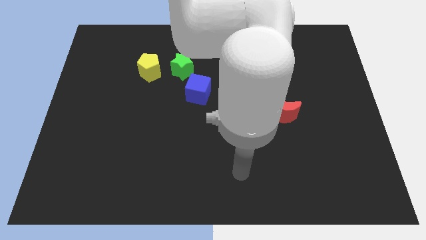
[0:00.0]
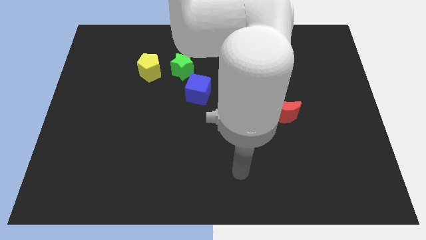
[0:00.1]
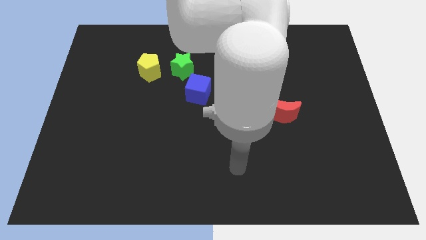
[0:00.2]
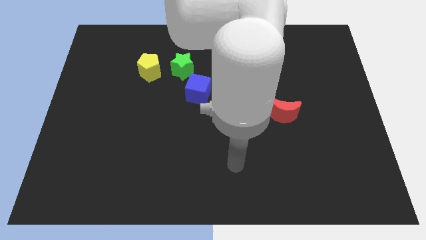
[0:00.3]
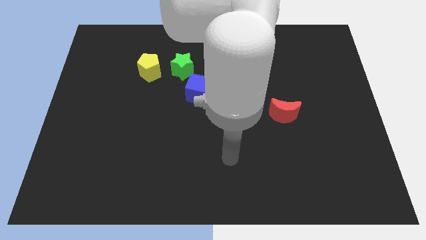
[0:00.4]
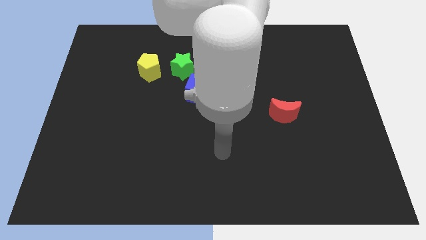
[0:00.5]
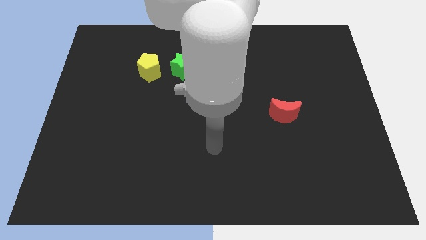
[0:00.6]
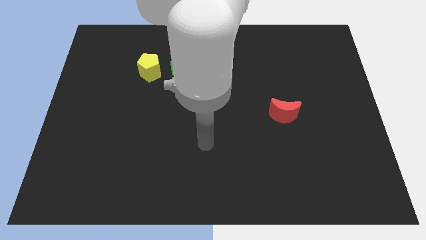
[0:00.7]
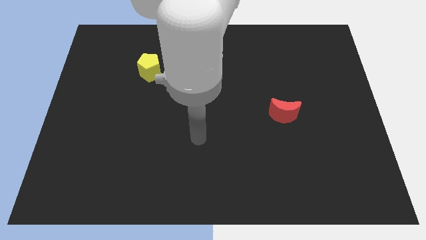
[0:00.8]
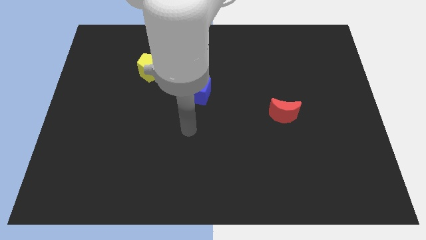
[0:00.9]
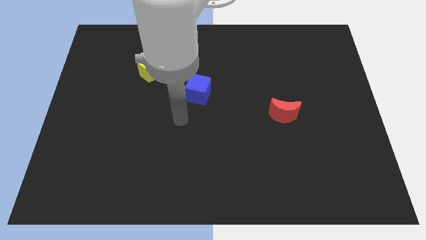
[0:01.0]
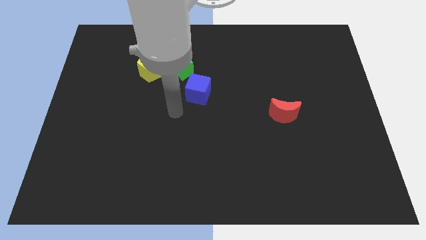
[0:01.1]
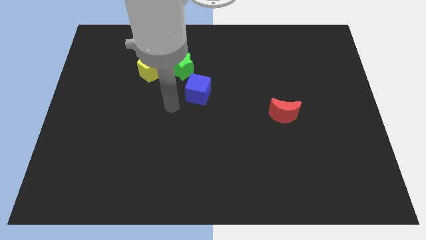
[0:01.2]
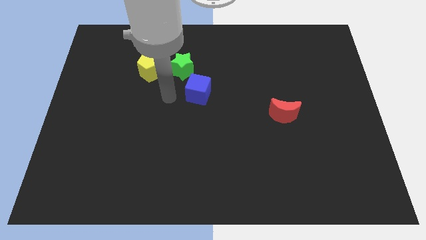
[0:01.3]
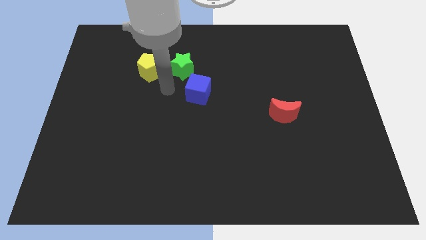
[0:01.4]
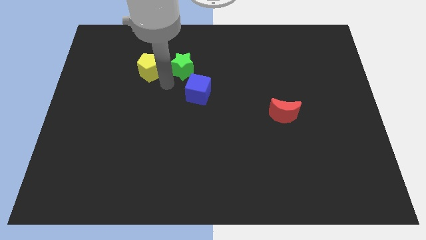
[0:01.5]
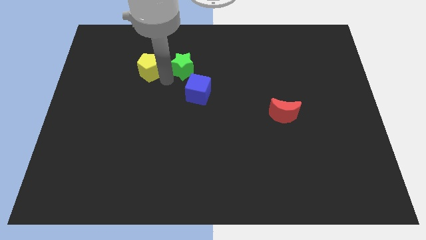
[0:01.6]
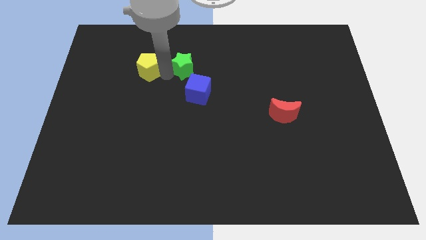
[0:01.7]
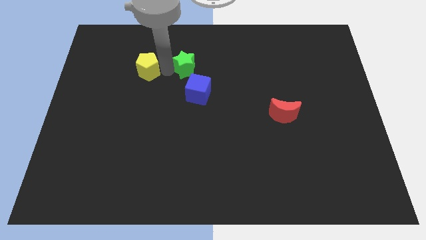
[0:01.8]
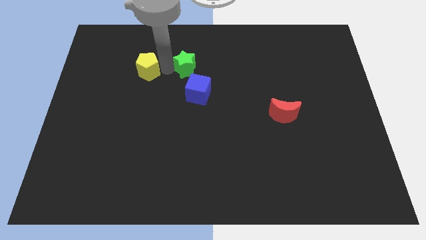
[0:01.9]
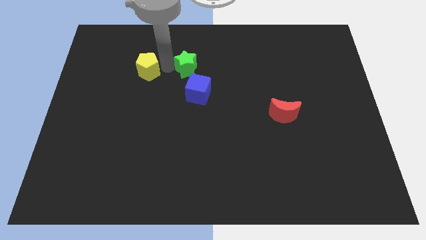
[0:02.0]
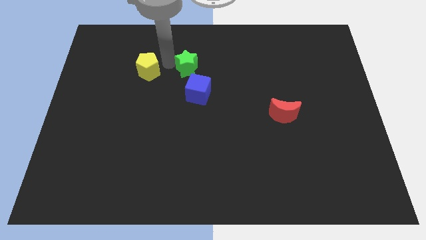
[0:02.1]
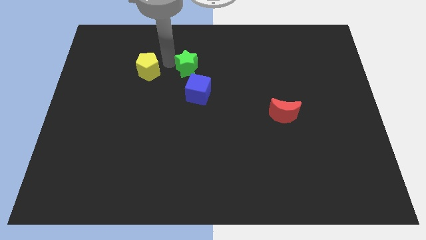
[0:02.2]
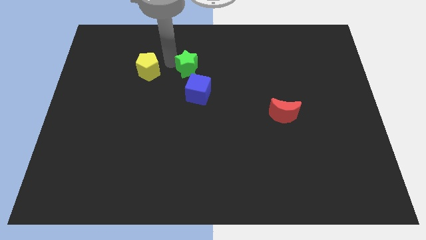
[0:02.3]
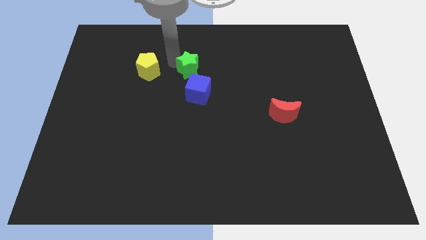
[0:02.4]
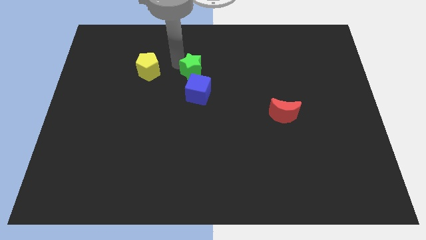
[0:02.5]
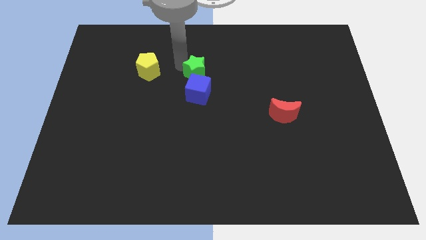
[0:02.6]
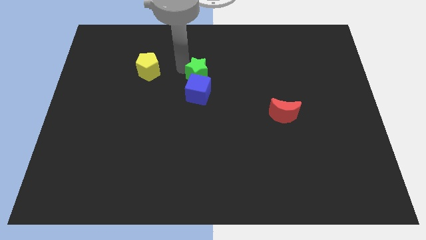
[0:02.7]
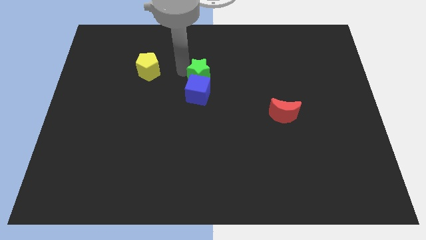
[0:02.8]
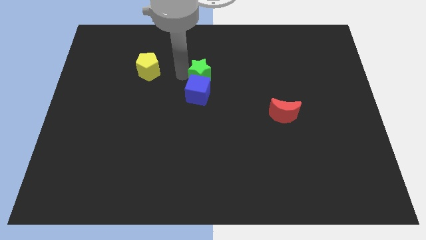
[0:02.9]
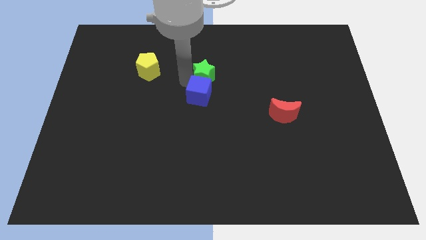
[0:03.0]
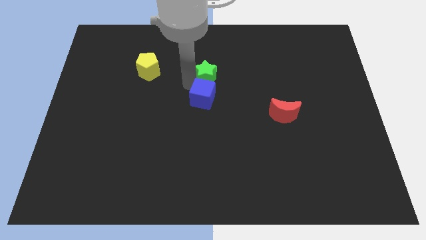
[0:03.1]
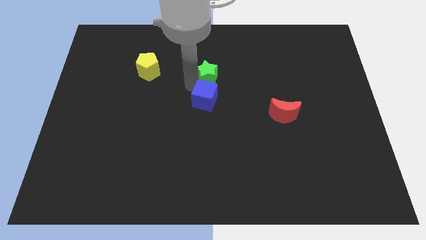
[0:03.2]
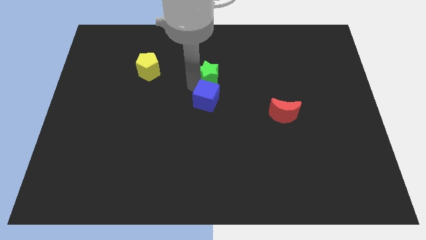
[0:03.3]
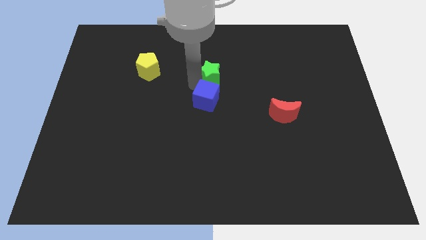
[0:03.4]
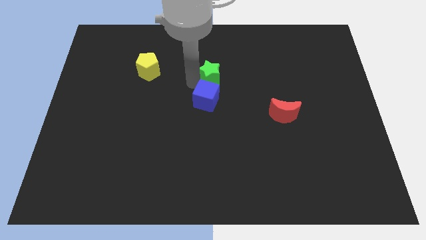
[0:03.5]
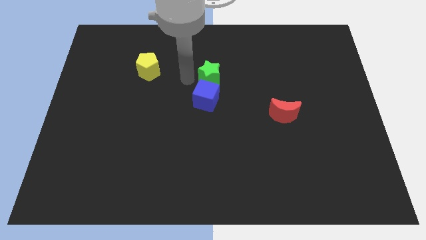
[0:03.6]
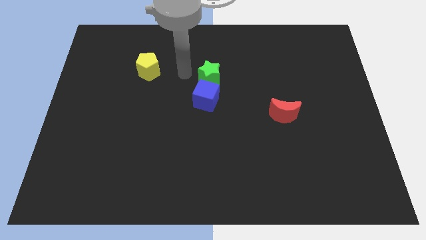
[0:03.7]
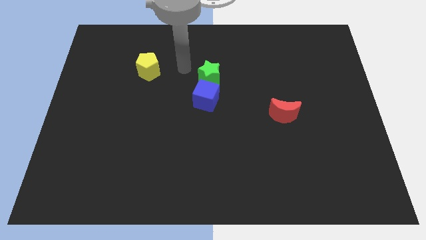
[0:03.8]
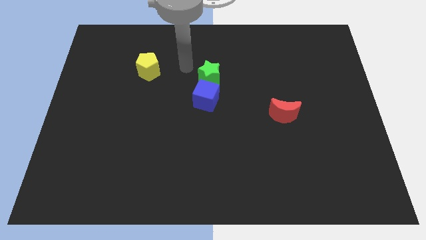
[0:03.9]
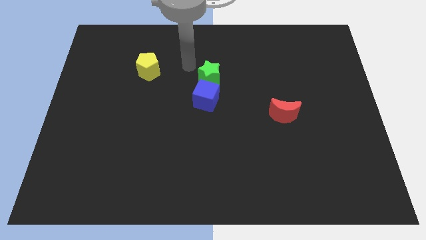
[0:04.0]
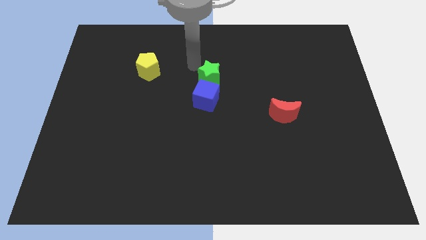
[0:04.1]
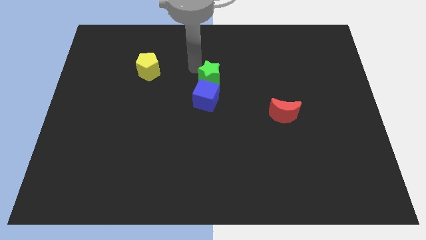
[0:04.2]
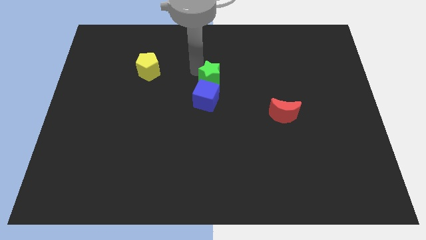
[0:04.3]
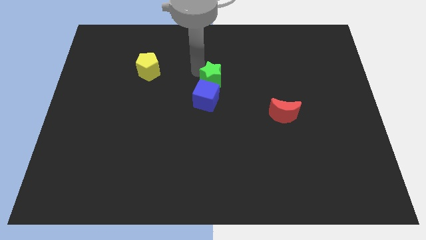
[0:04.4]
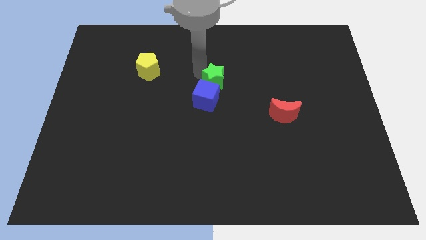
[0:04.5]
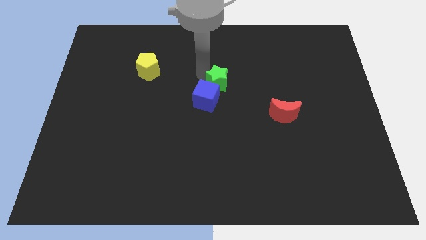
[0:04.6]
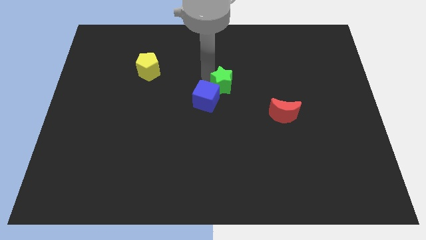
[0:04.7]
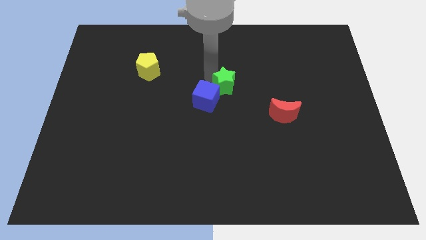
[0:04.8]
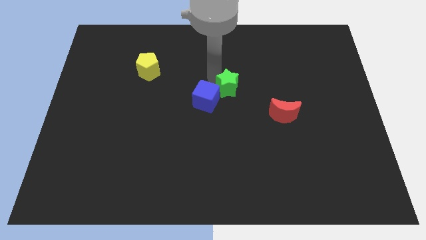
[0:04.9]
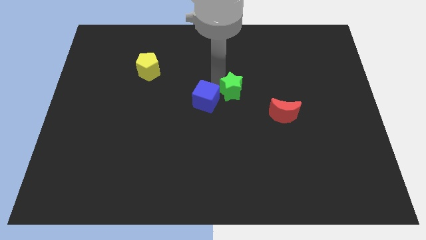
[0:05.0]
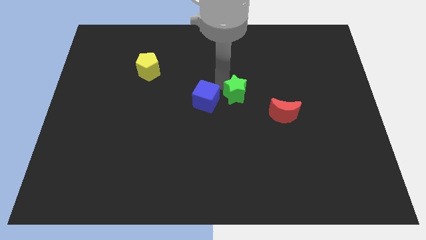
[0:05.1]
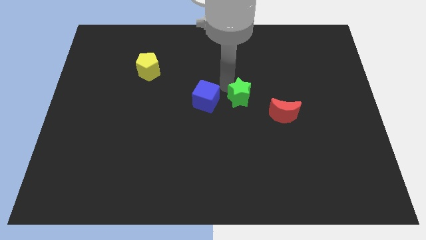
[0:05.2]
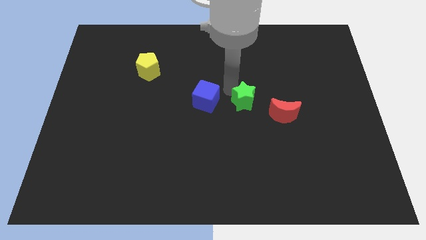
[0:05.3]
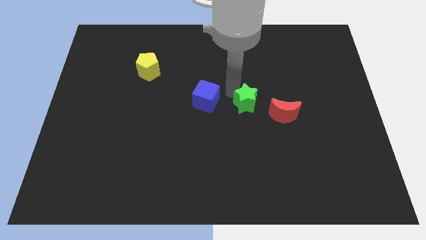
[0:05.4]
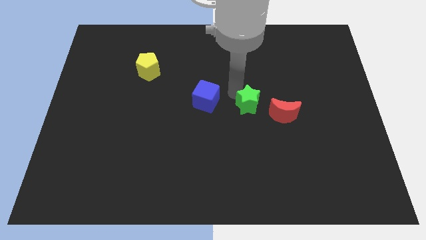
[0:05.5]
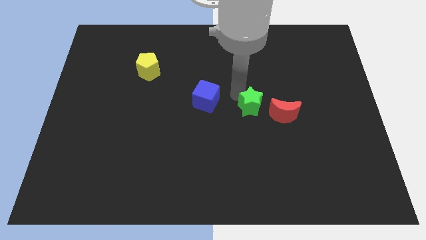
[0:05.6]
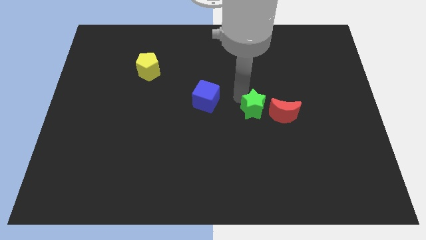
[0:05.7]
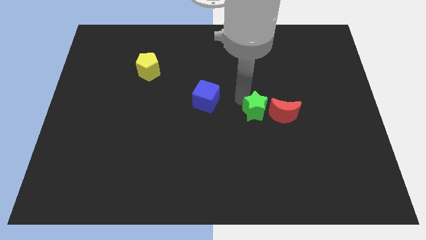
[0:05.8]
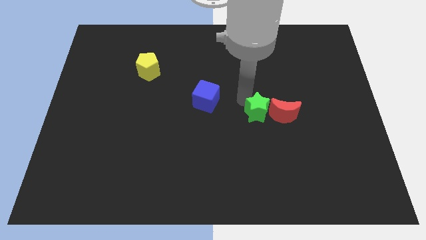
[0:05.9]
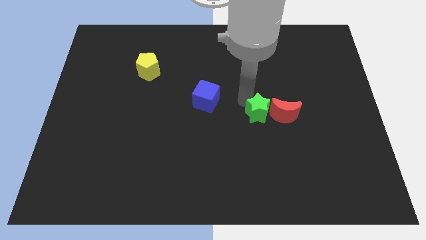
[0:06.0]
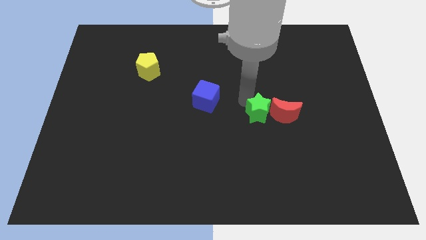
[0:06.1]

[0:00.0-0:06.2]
put the green star to the red block

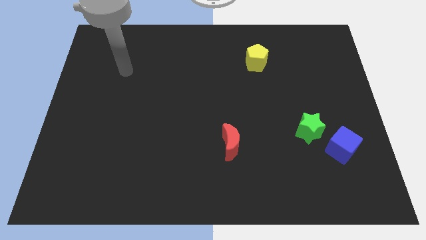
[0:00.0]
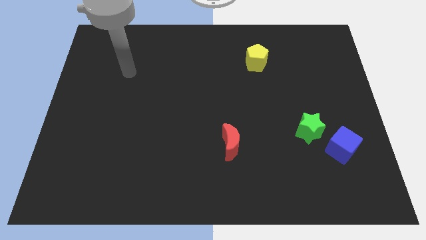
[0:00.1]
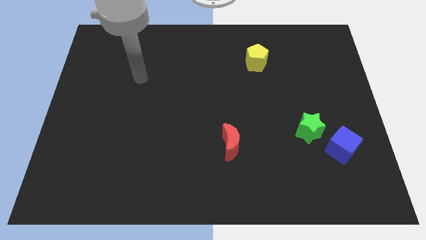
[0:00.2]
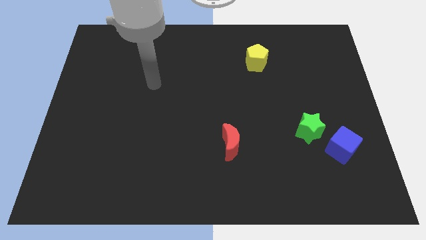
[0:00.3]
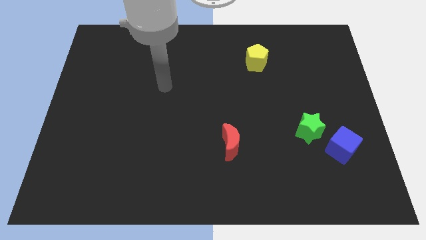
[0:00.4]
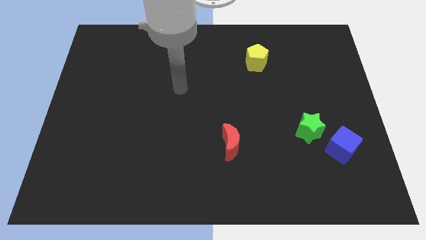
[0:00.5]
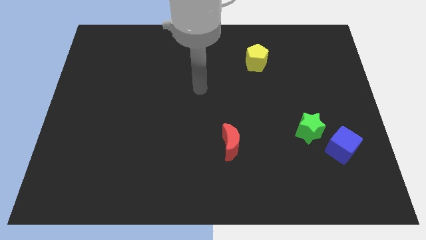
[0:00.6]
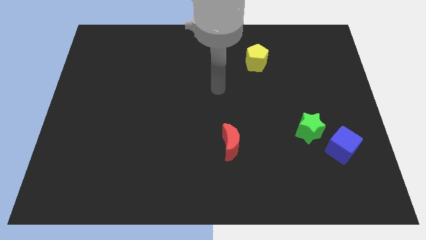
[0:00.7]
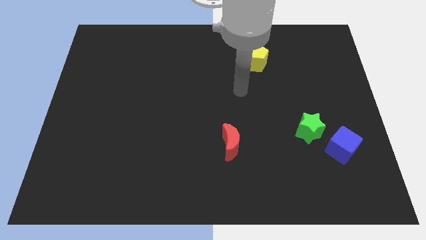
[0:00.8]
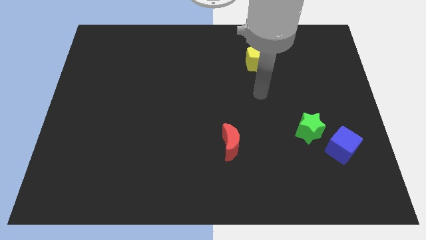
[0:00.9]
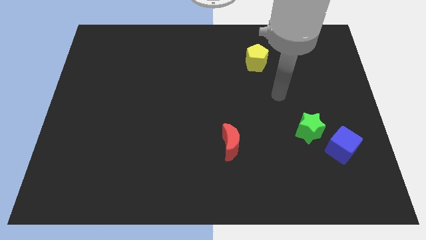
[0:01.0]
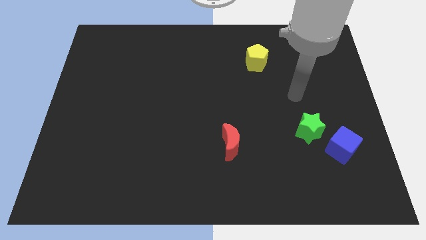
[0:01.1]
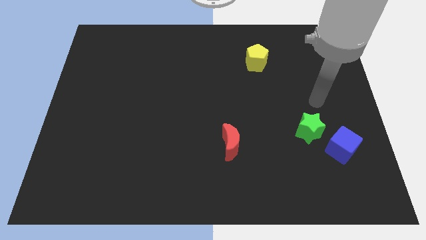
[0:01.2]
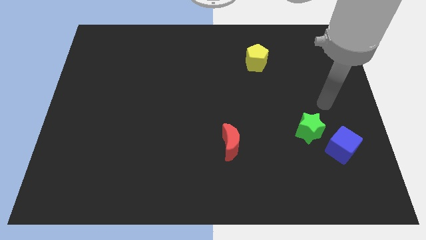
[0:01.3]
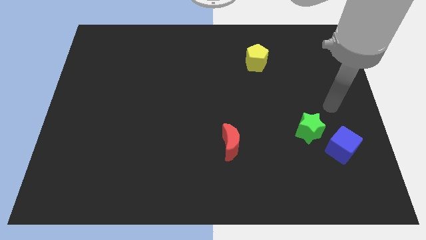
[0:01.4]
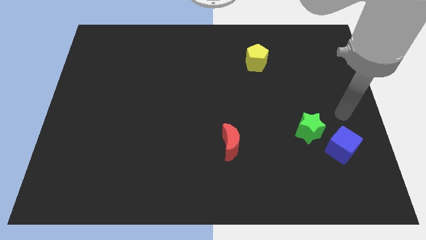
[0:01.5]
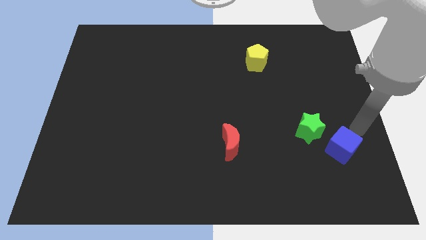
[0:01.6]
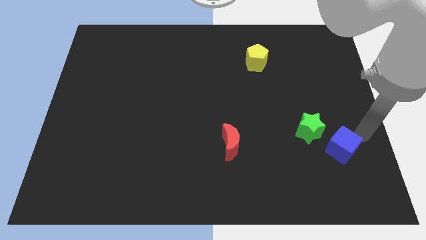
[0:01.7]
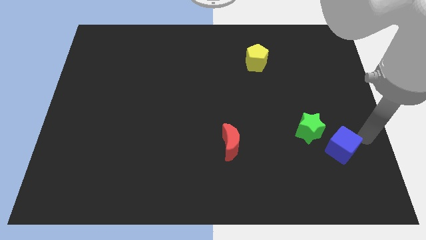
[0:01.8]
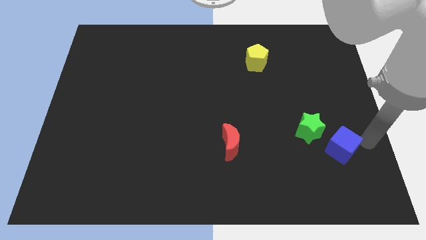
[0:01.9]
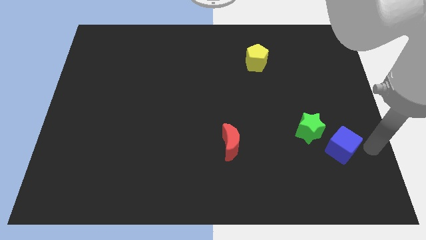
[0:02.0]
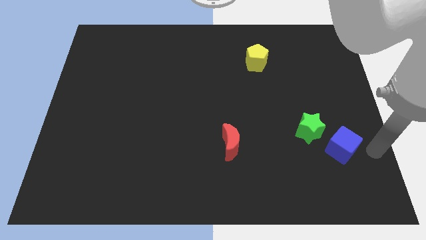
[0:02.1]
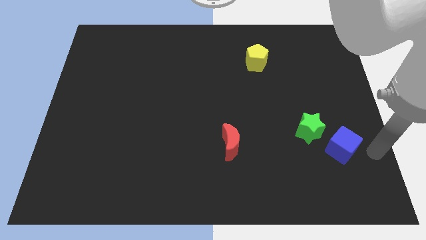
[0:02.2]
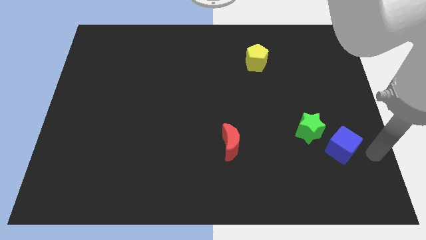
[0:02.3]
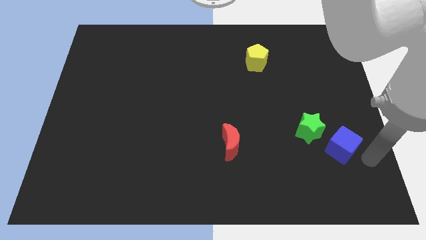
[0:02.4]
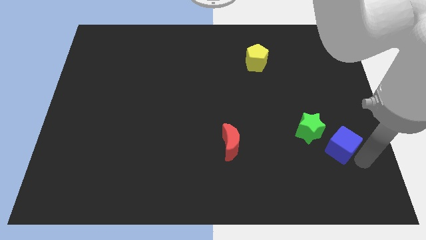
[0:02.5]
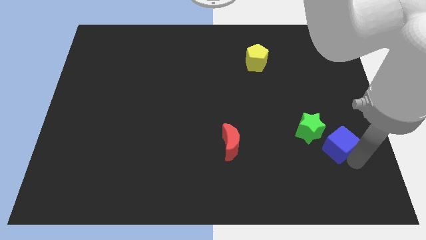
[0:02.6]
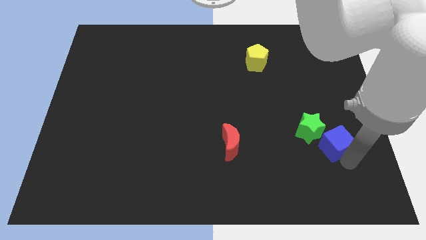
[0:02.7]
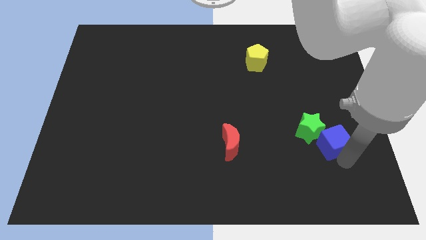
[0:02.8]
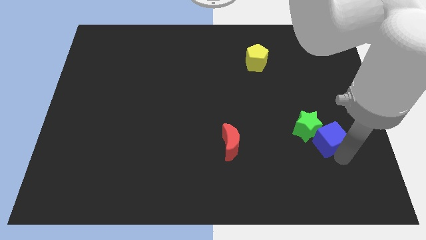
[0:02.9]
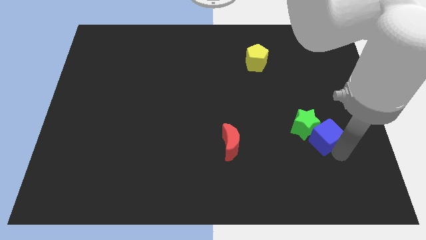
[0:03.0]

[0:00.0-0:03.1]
slide the blue block to the green star
